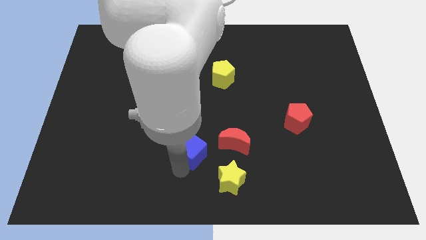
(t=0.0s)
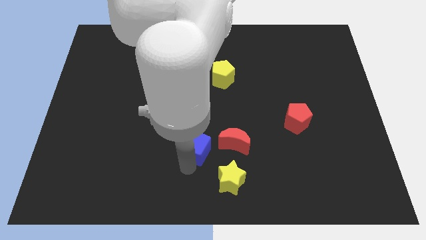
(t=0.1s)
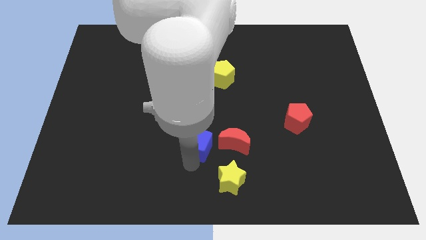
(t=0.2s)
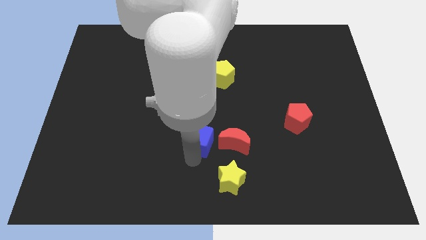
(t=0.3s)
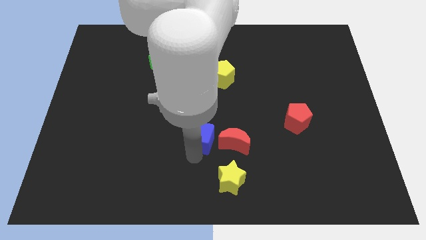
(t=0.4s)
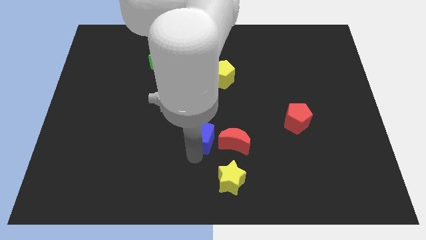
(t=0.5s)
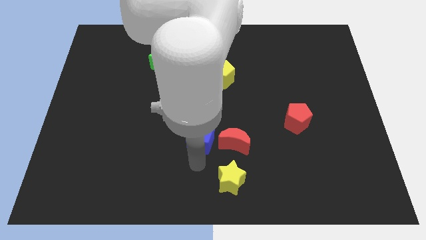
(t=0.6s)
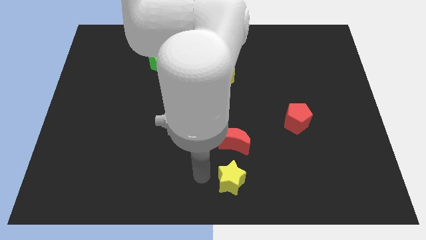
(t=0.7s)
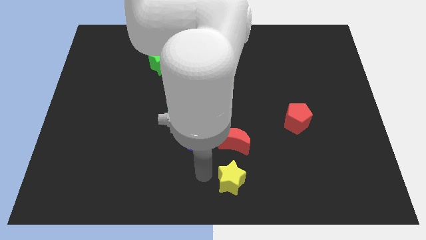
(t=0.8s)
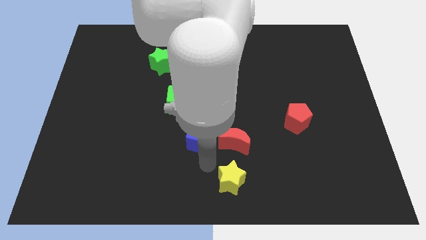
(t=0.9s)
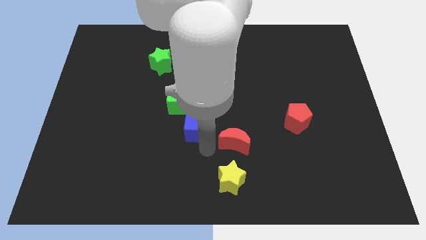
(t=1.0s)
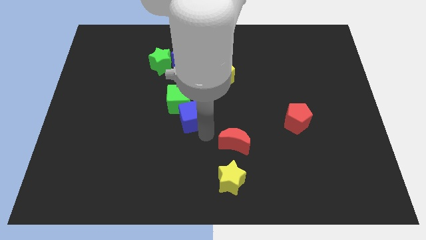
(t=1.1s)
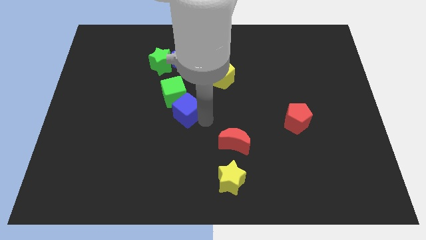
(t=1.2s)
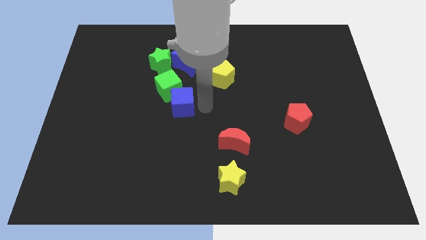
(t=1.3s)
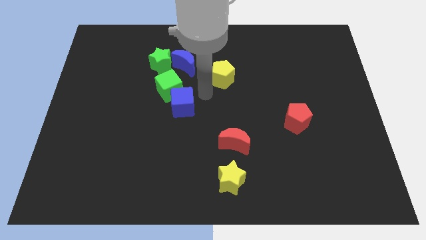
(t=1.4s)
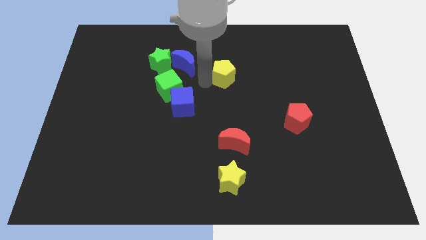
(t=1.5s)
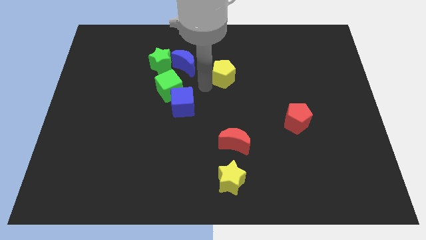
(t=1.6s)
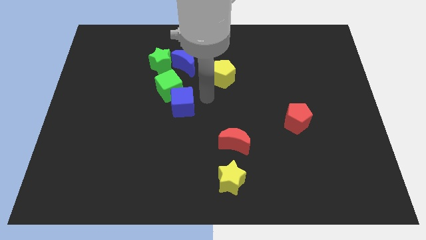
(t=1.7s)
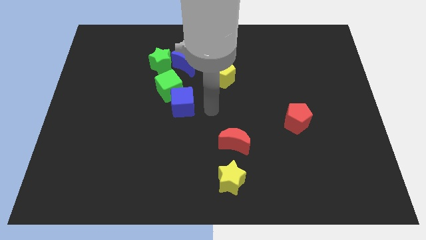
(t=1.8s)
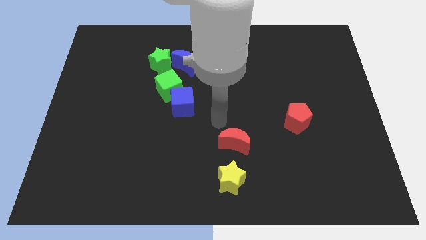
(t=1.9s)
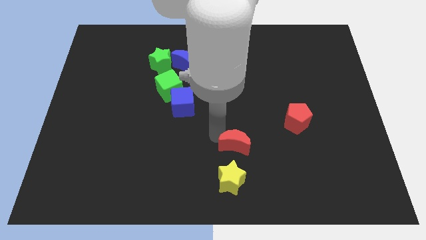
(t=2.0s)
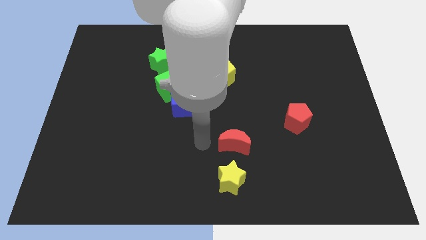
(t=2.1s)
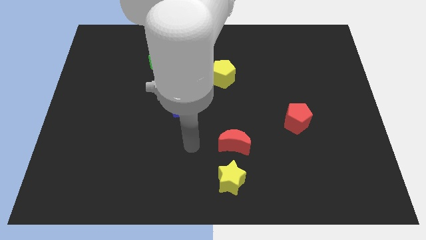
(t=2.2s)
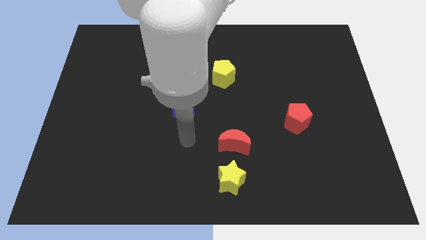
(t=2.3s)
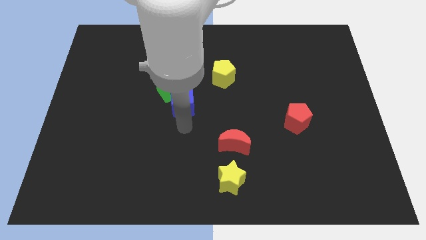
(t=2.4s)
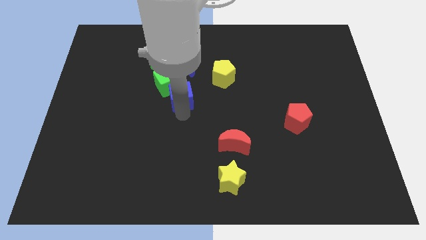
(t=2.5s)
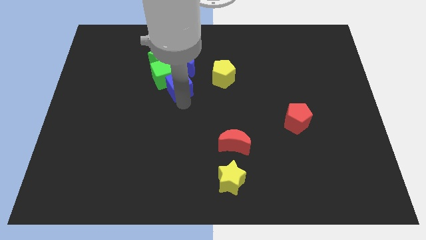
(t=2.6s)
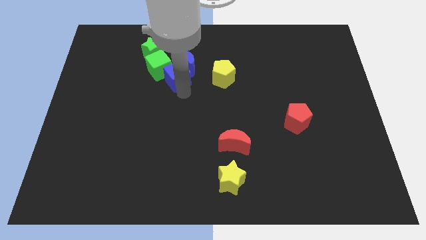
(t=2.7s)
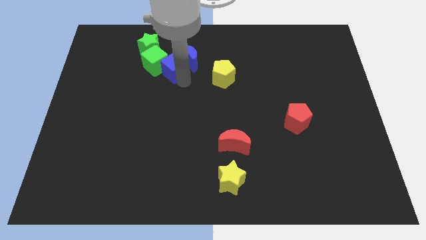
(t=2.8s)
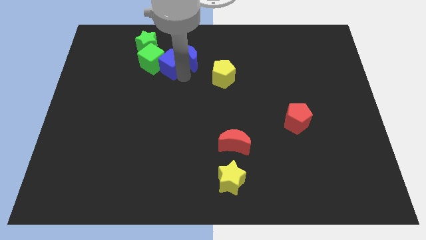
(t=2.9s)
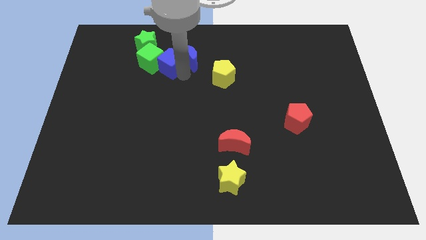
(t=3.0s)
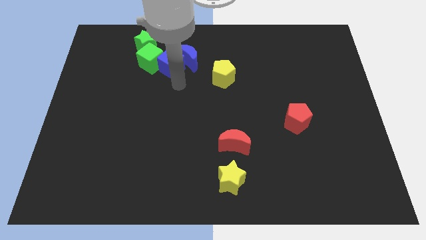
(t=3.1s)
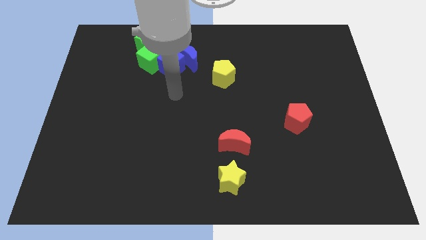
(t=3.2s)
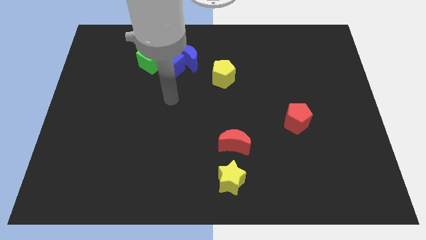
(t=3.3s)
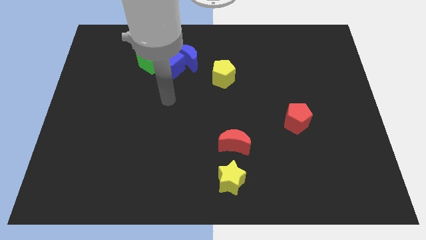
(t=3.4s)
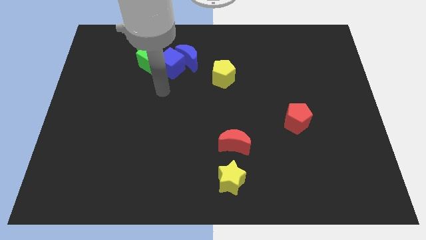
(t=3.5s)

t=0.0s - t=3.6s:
move the blue and green blocks towards top

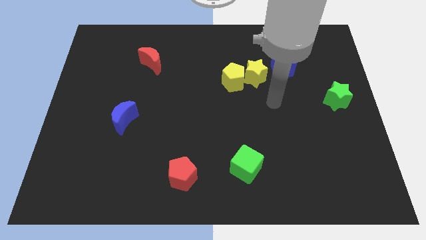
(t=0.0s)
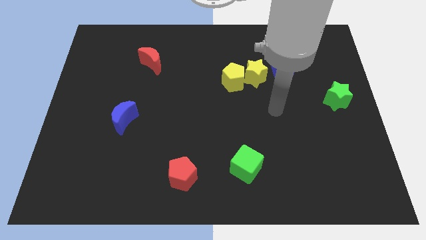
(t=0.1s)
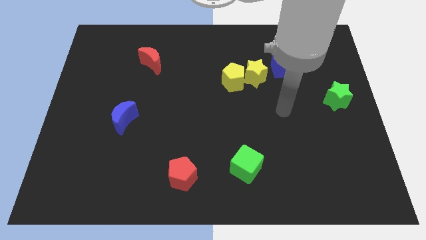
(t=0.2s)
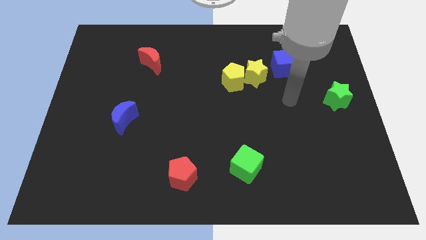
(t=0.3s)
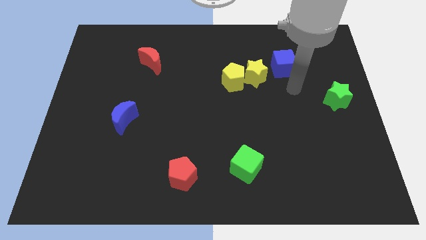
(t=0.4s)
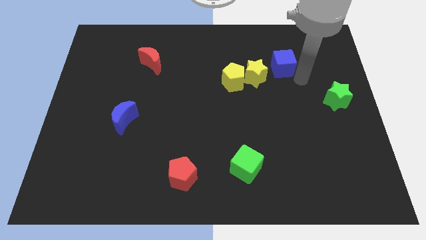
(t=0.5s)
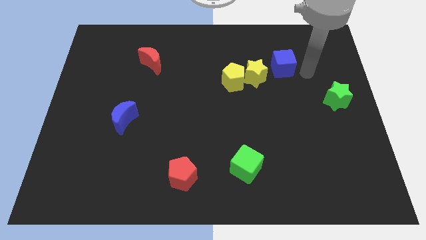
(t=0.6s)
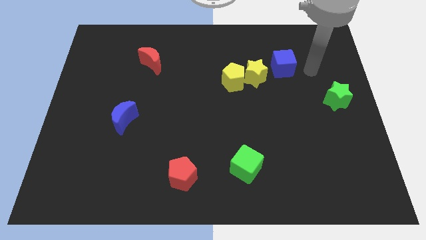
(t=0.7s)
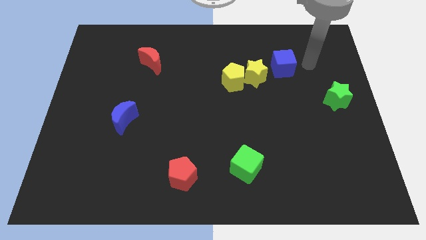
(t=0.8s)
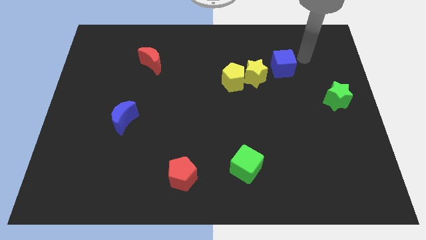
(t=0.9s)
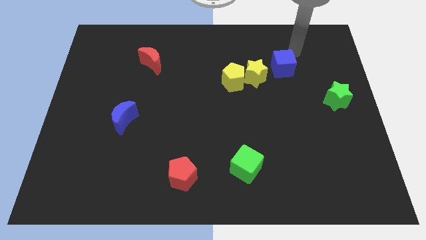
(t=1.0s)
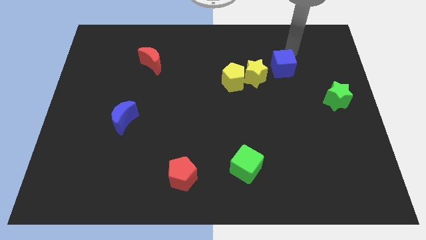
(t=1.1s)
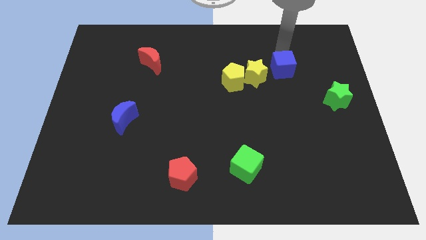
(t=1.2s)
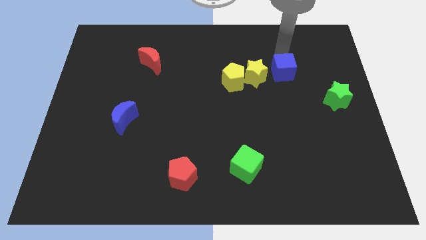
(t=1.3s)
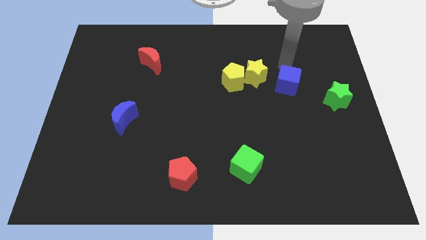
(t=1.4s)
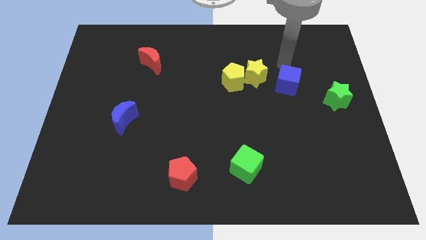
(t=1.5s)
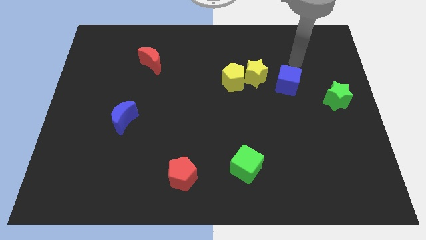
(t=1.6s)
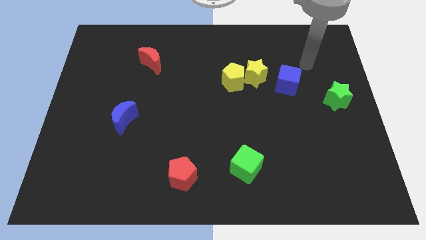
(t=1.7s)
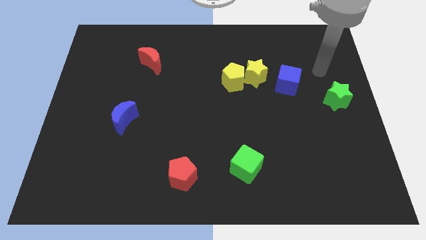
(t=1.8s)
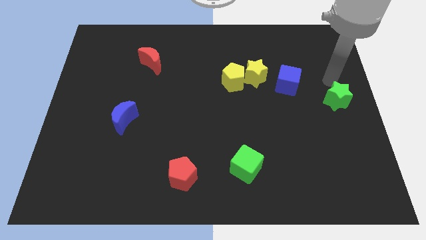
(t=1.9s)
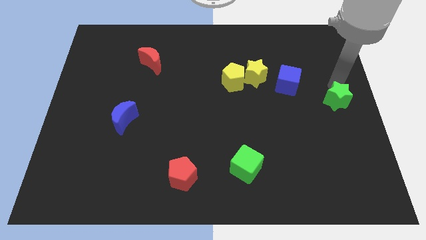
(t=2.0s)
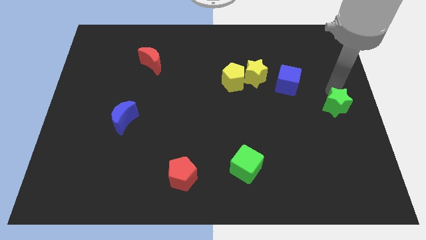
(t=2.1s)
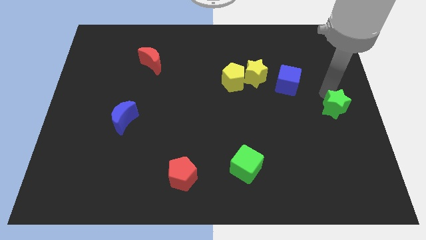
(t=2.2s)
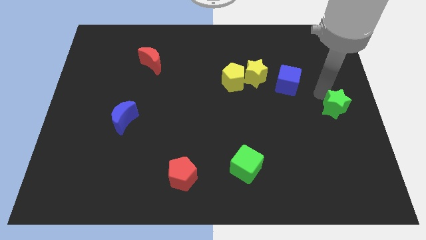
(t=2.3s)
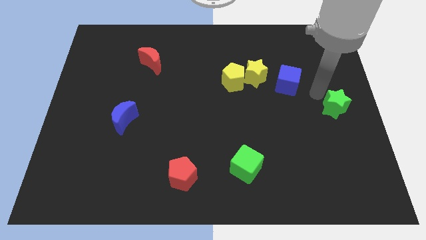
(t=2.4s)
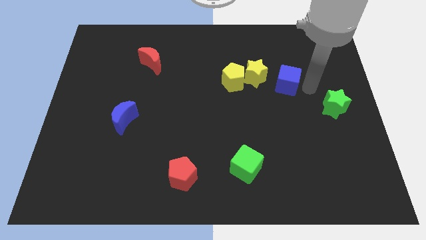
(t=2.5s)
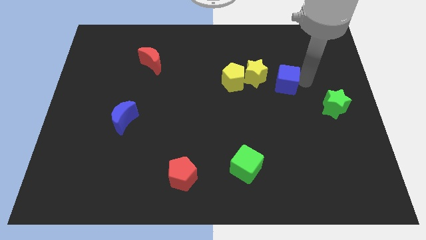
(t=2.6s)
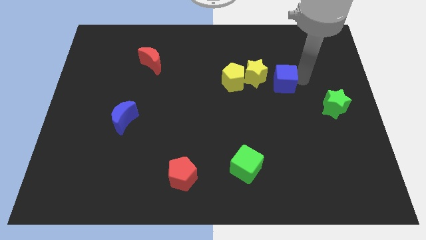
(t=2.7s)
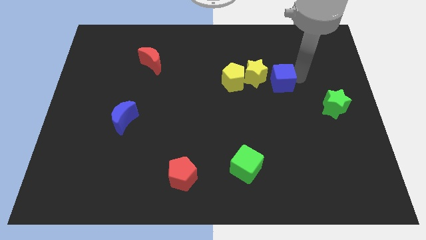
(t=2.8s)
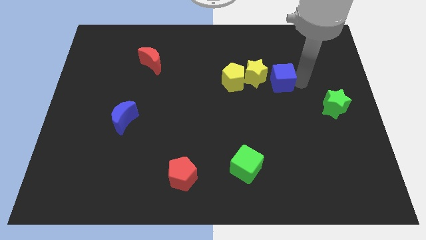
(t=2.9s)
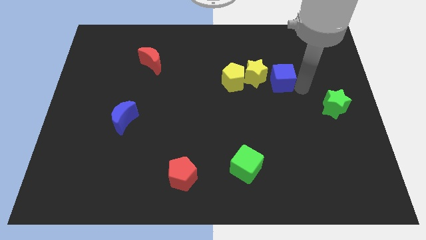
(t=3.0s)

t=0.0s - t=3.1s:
push the blue cube to the right of the yellow star

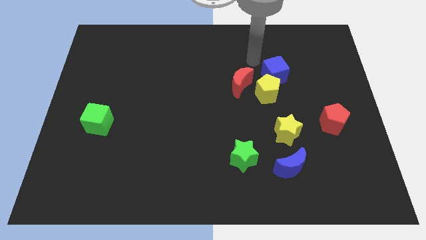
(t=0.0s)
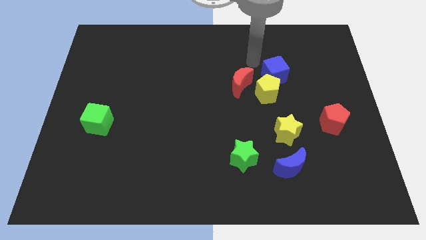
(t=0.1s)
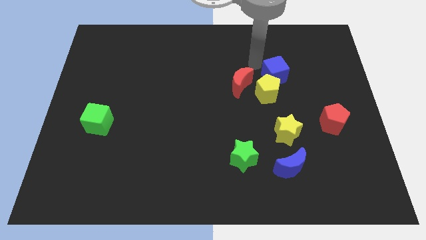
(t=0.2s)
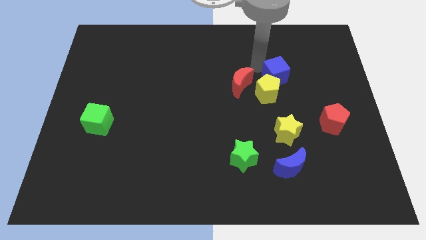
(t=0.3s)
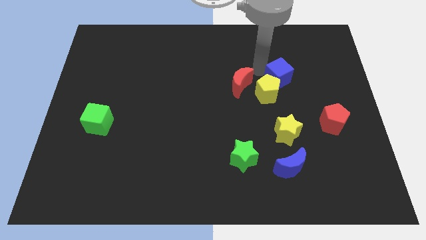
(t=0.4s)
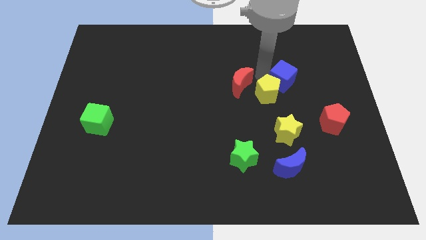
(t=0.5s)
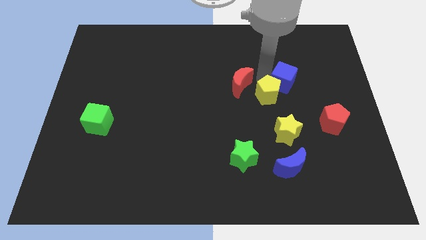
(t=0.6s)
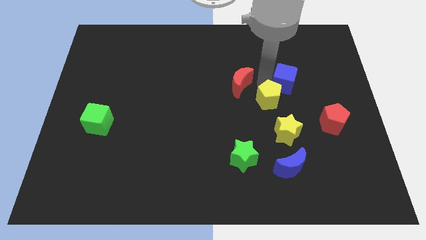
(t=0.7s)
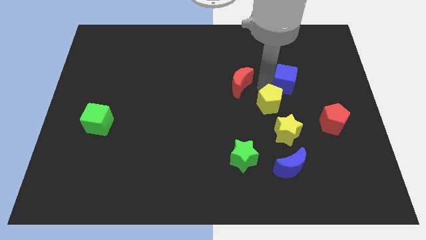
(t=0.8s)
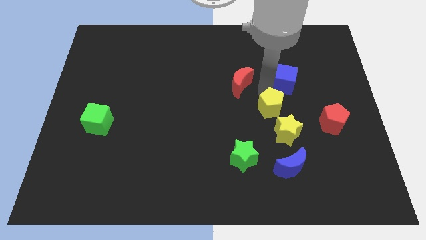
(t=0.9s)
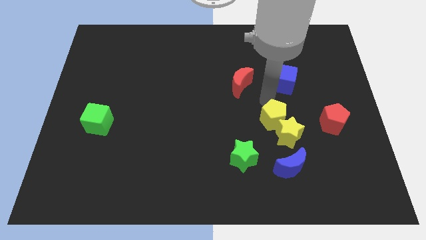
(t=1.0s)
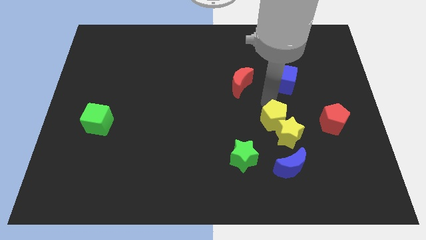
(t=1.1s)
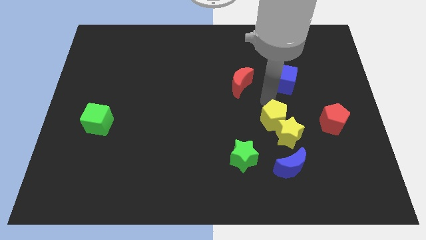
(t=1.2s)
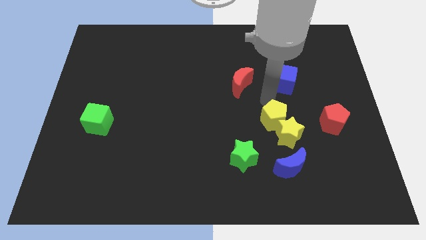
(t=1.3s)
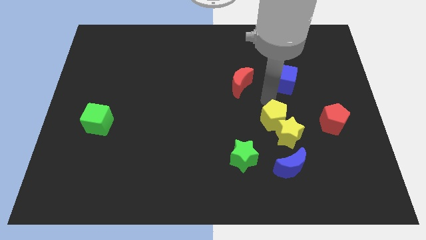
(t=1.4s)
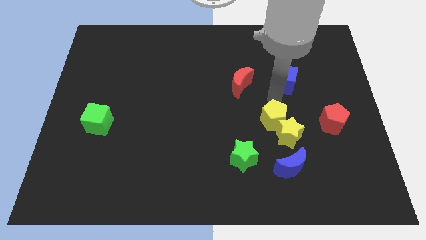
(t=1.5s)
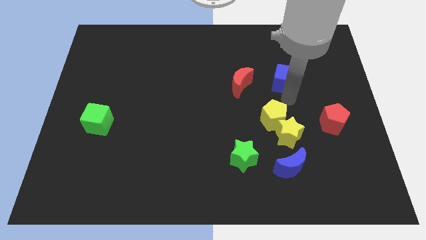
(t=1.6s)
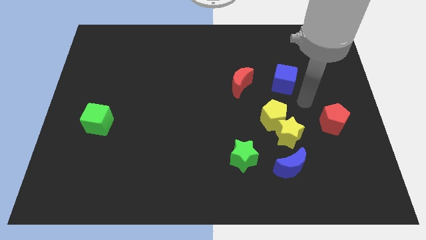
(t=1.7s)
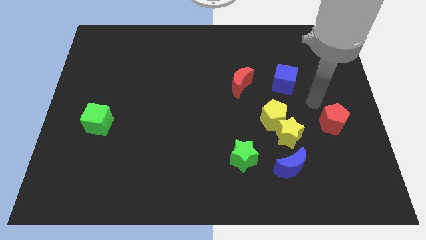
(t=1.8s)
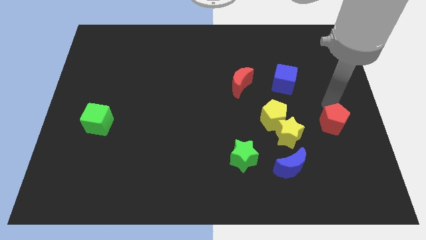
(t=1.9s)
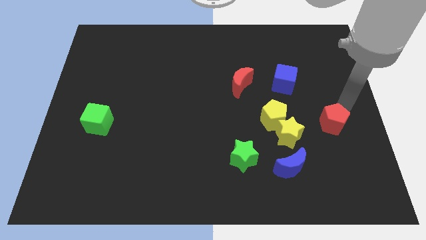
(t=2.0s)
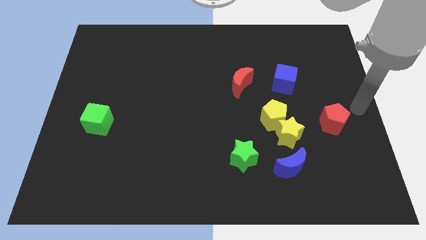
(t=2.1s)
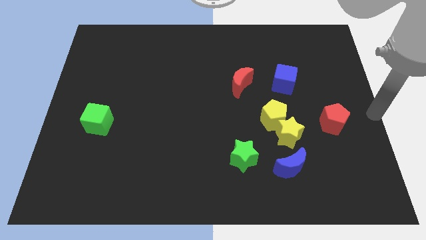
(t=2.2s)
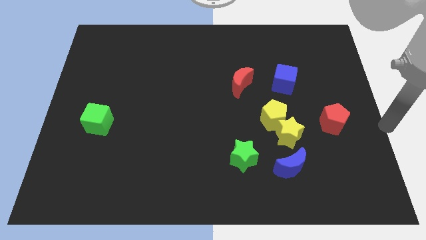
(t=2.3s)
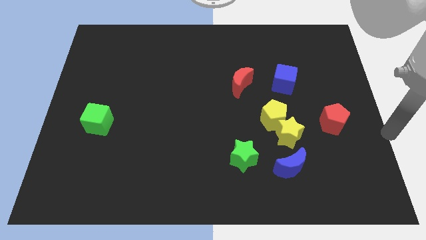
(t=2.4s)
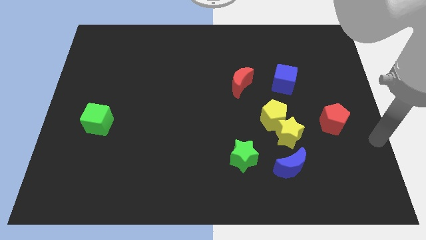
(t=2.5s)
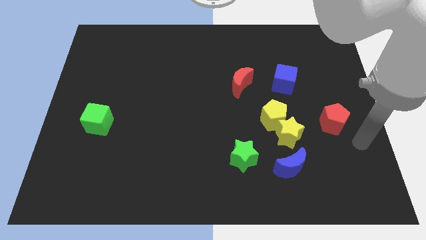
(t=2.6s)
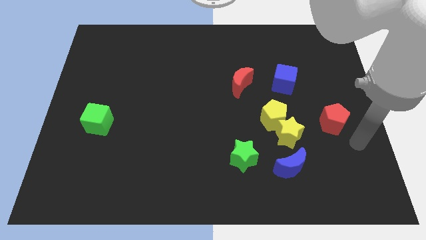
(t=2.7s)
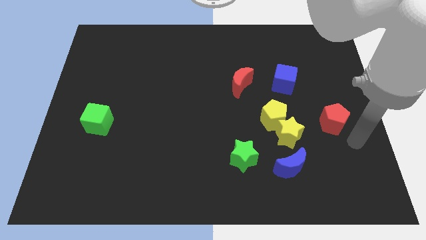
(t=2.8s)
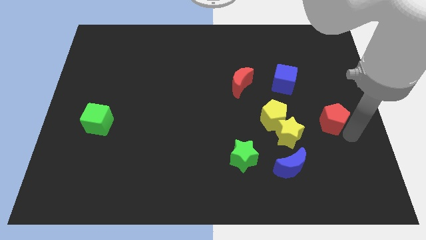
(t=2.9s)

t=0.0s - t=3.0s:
push the yellow blocks towards the blue crescent
